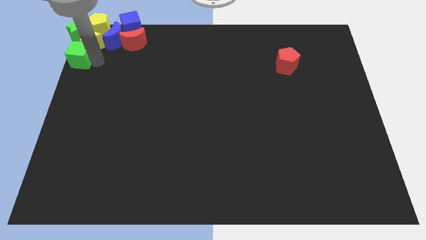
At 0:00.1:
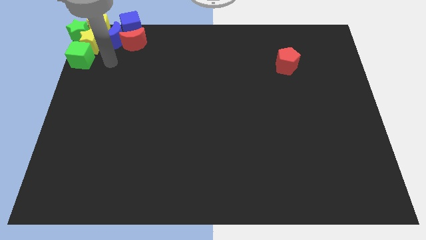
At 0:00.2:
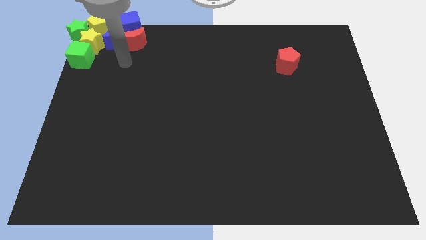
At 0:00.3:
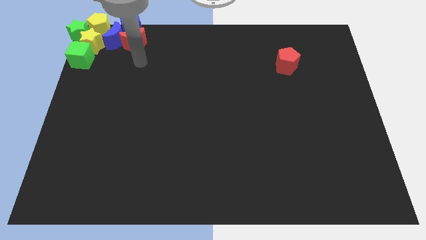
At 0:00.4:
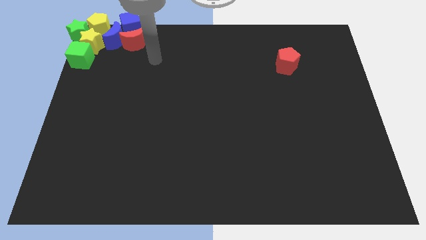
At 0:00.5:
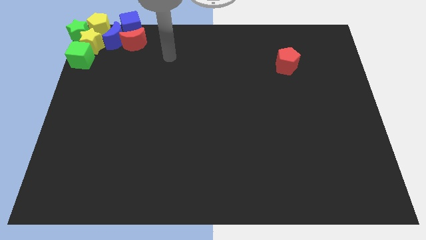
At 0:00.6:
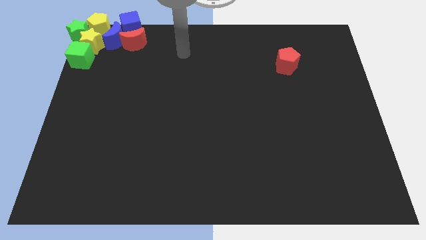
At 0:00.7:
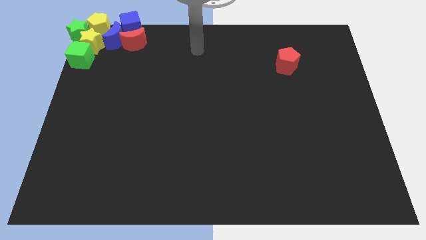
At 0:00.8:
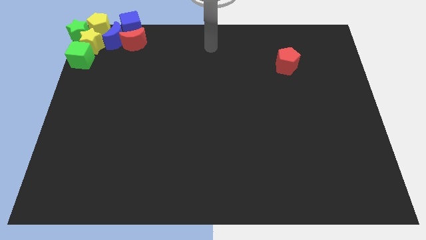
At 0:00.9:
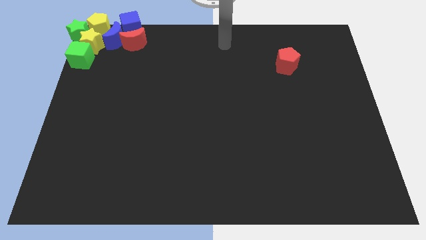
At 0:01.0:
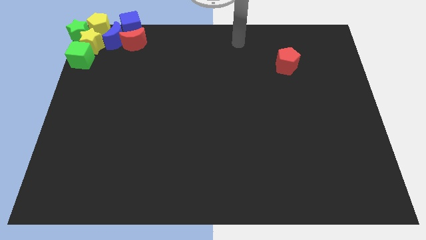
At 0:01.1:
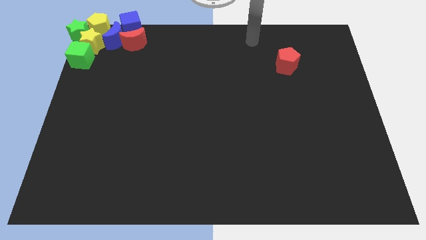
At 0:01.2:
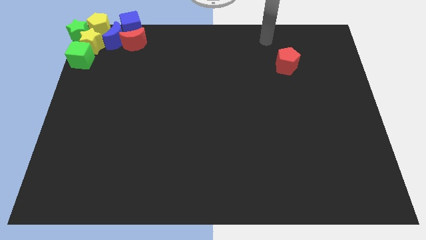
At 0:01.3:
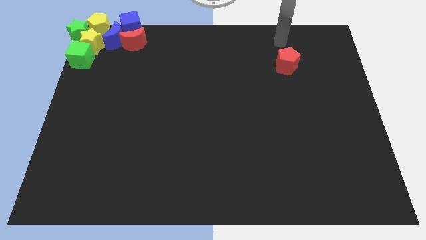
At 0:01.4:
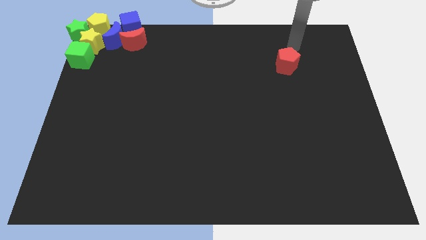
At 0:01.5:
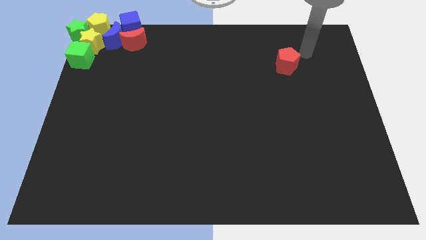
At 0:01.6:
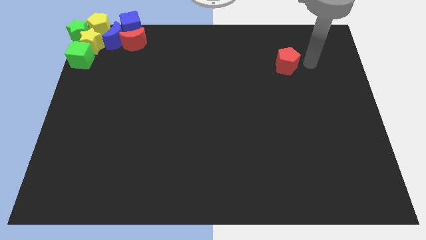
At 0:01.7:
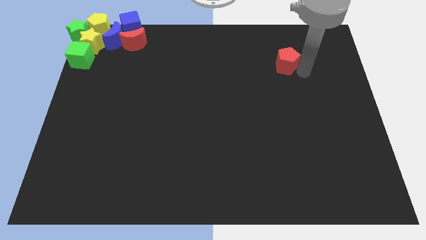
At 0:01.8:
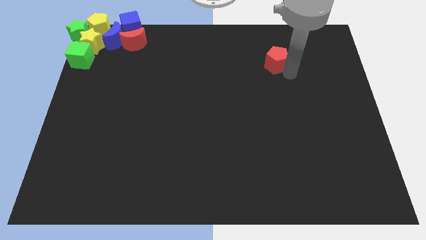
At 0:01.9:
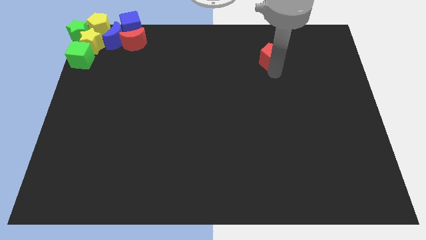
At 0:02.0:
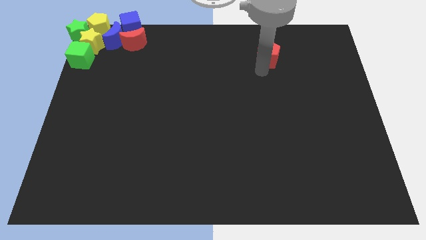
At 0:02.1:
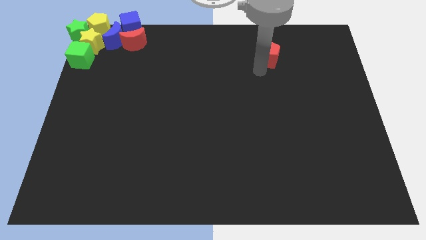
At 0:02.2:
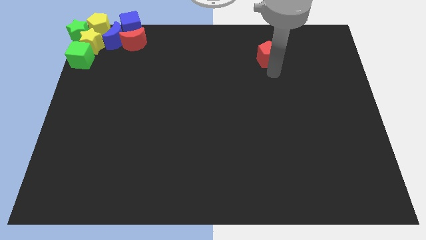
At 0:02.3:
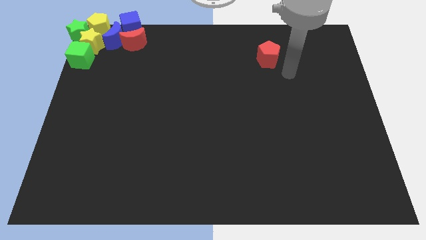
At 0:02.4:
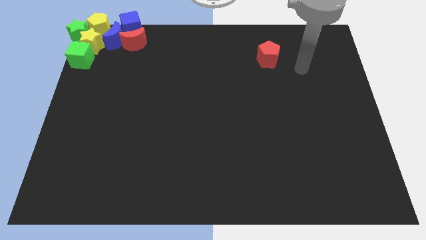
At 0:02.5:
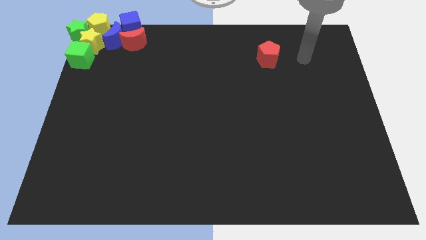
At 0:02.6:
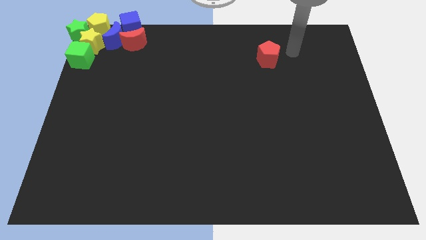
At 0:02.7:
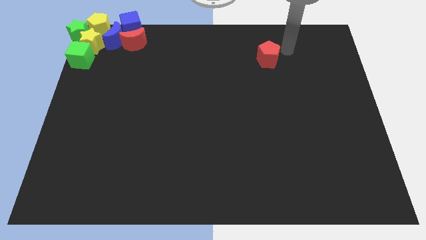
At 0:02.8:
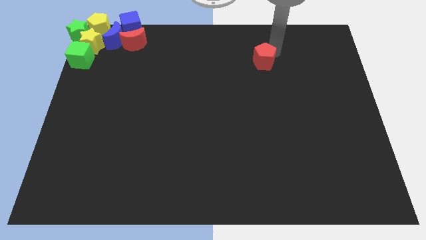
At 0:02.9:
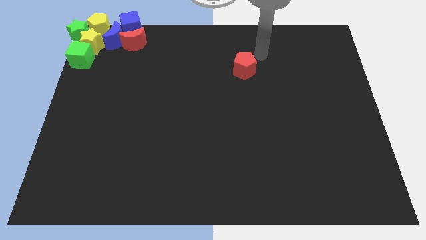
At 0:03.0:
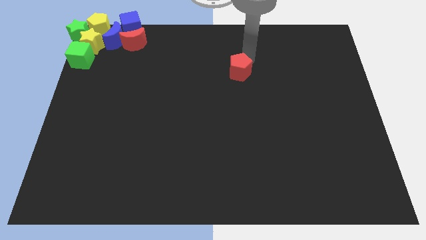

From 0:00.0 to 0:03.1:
push the red pentagon slightly bottom left to the board

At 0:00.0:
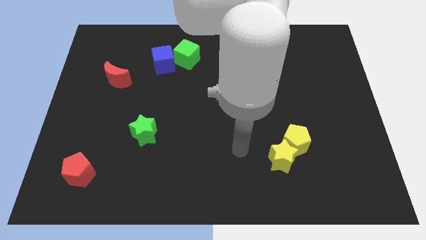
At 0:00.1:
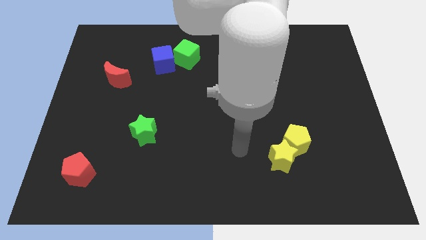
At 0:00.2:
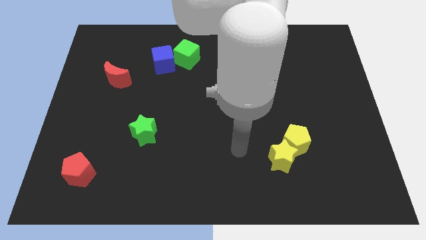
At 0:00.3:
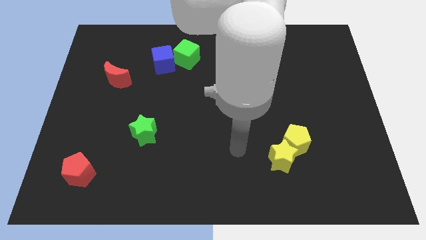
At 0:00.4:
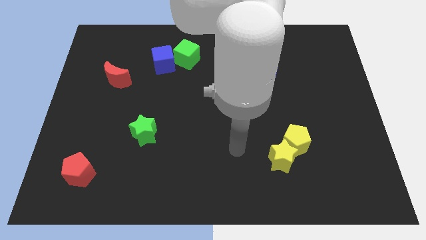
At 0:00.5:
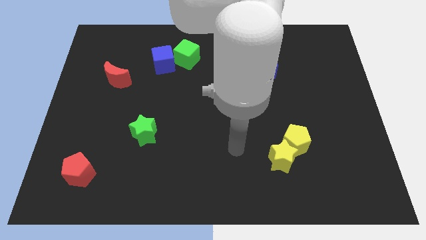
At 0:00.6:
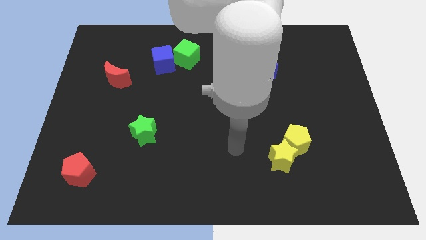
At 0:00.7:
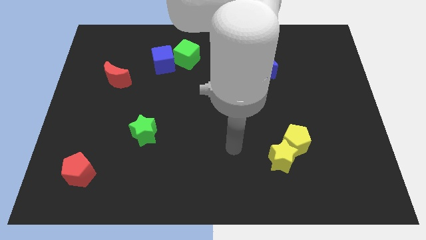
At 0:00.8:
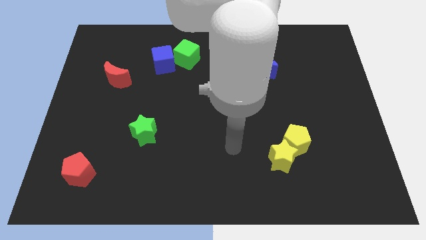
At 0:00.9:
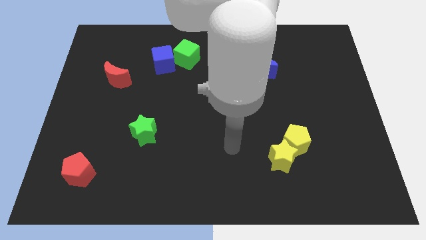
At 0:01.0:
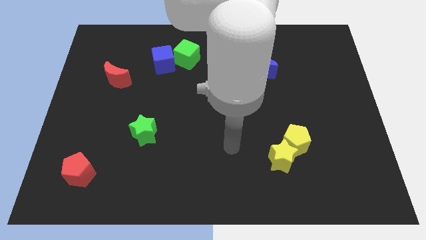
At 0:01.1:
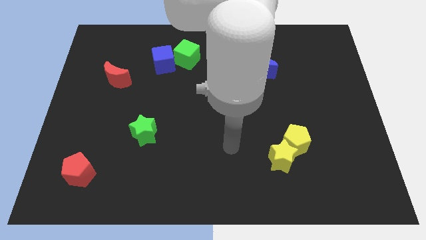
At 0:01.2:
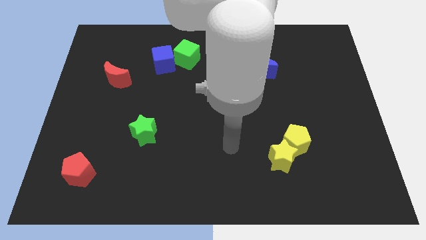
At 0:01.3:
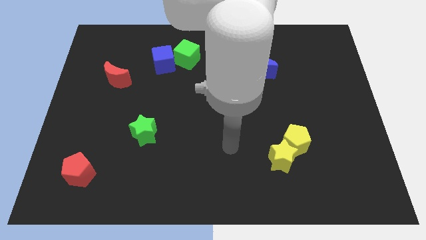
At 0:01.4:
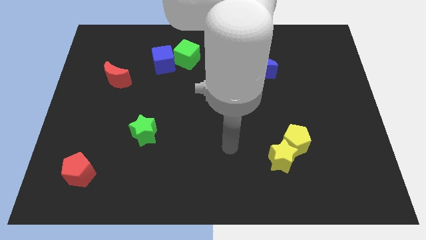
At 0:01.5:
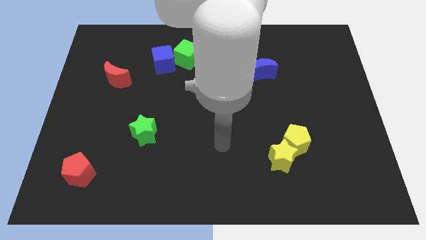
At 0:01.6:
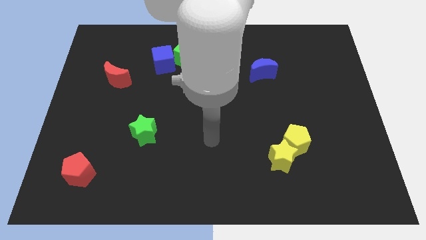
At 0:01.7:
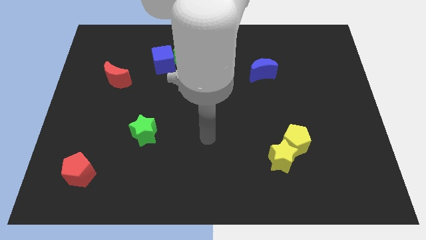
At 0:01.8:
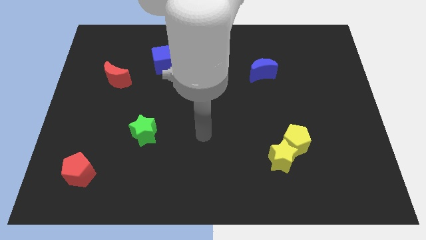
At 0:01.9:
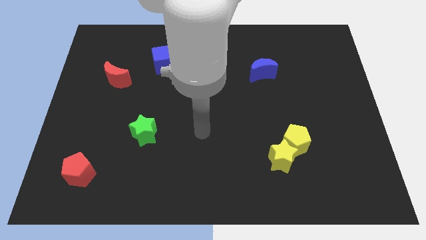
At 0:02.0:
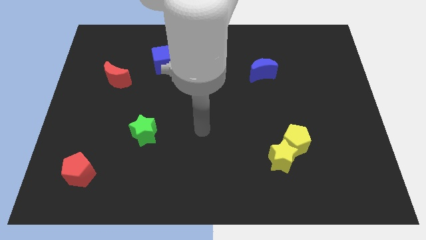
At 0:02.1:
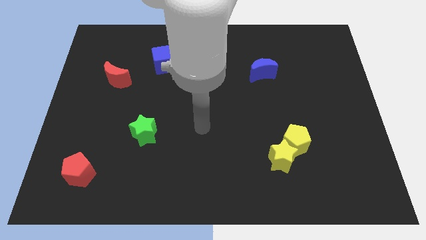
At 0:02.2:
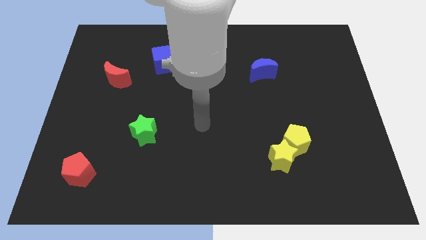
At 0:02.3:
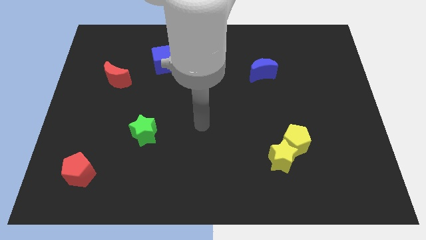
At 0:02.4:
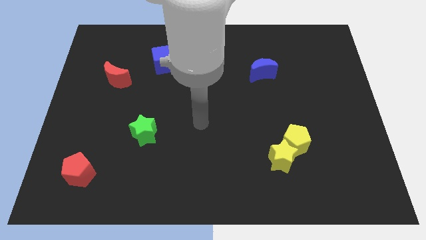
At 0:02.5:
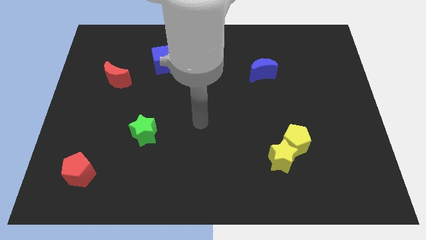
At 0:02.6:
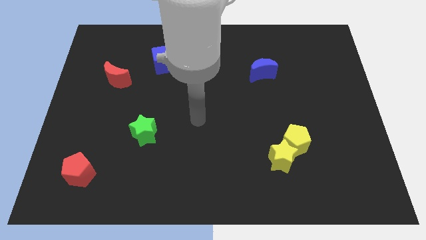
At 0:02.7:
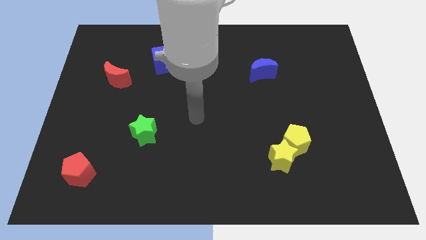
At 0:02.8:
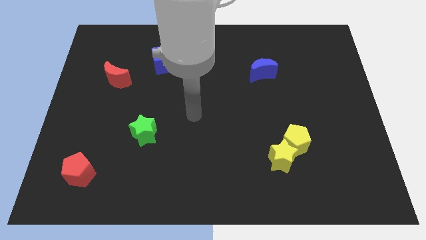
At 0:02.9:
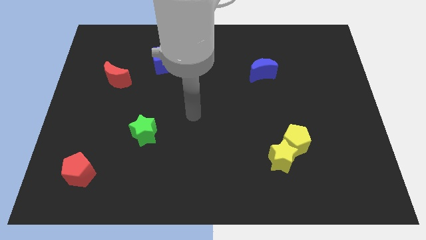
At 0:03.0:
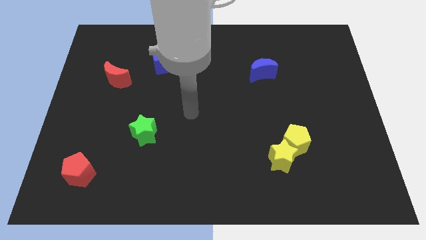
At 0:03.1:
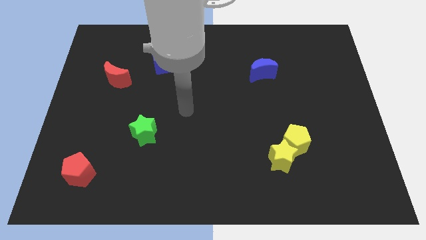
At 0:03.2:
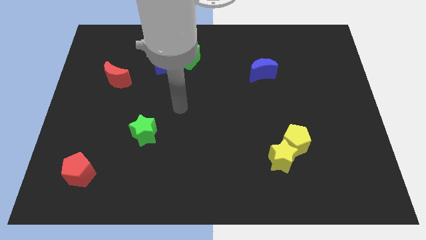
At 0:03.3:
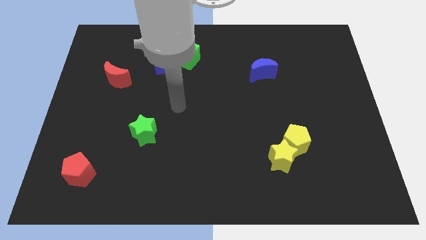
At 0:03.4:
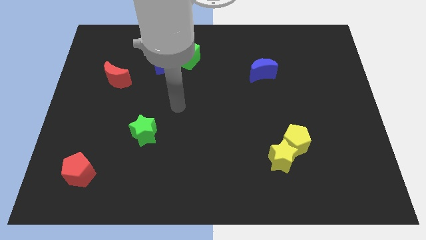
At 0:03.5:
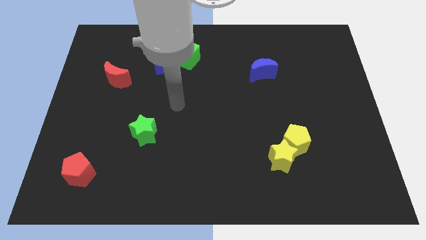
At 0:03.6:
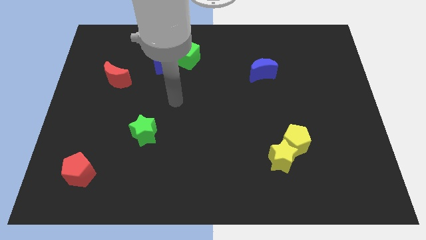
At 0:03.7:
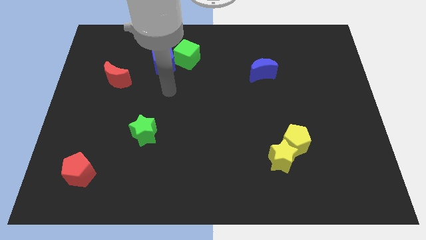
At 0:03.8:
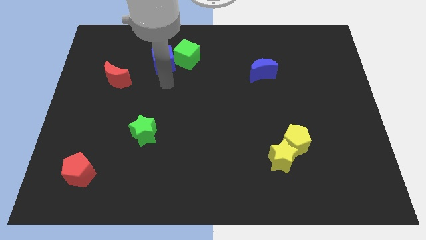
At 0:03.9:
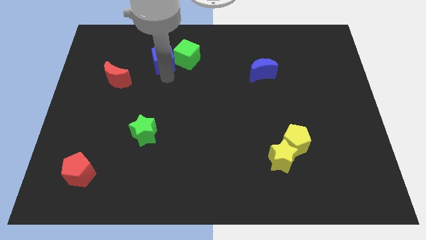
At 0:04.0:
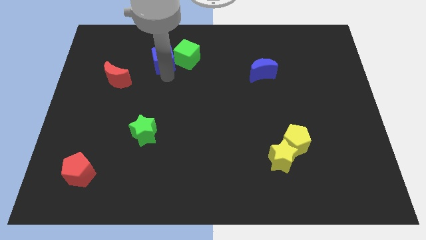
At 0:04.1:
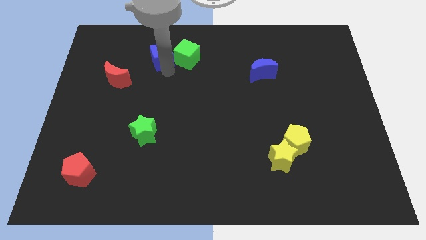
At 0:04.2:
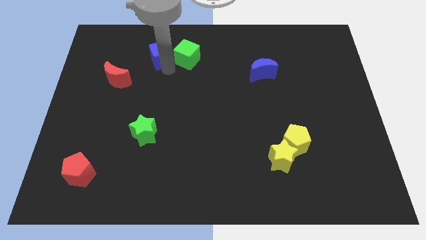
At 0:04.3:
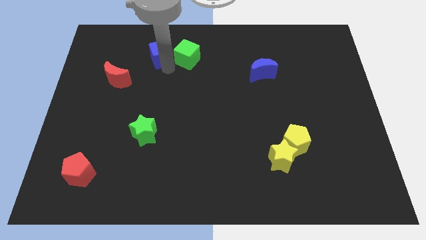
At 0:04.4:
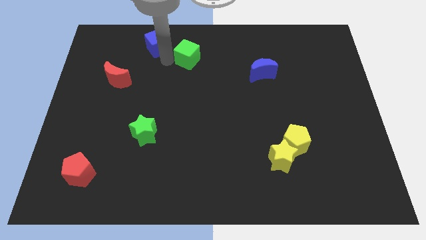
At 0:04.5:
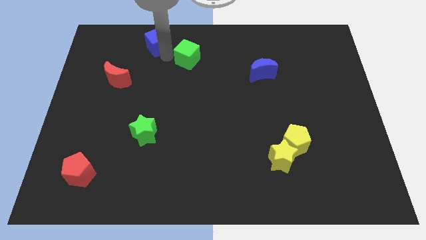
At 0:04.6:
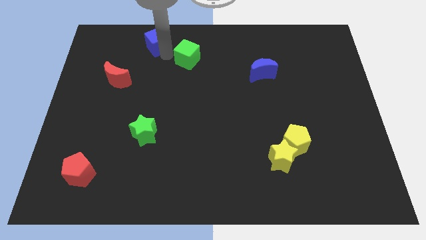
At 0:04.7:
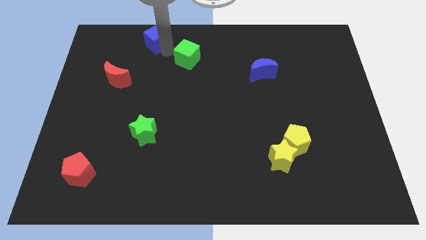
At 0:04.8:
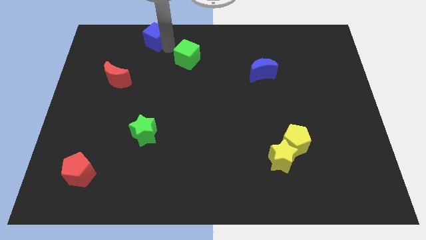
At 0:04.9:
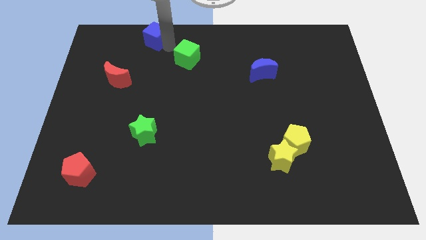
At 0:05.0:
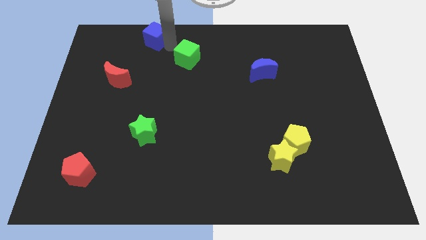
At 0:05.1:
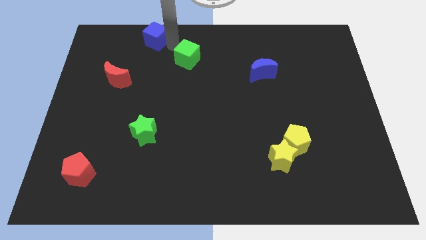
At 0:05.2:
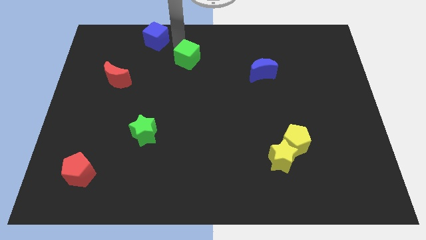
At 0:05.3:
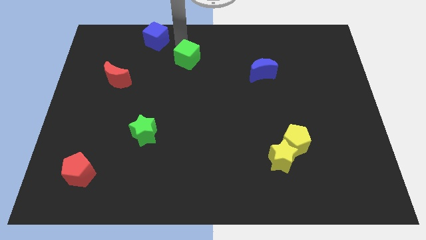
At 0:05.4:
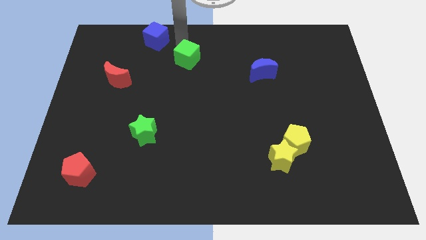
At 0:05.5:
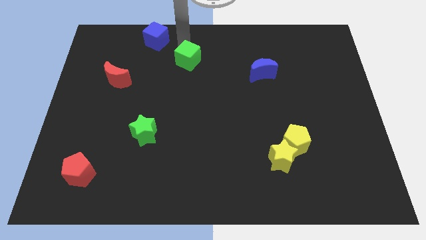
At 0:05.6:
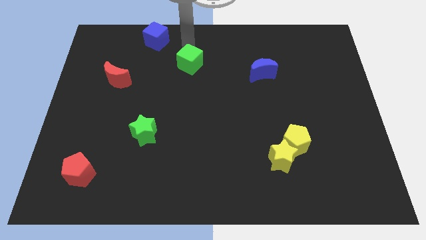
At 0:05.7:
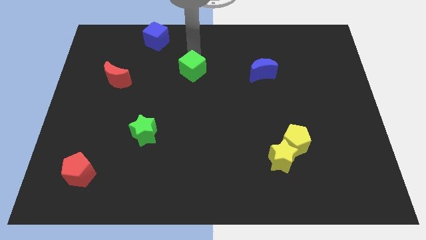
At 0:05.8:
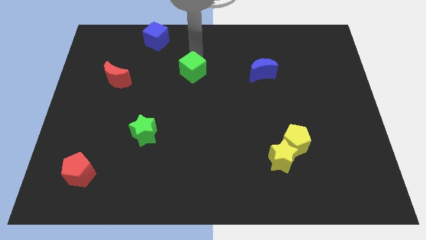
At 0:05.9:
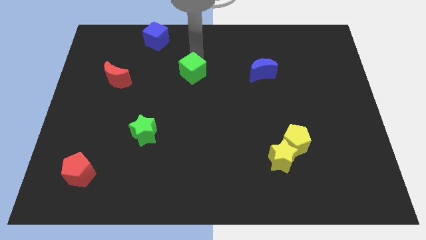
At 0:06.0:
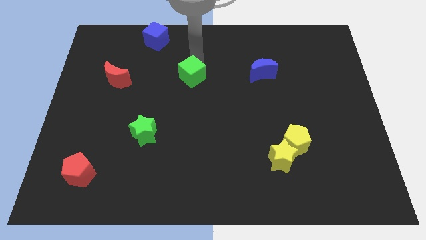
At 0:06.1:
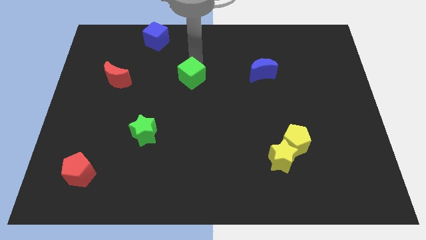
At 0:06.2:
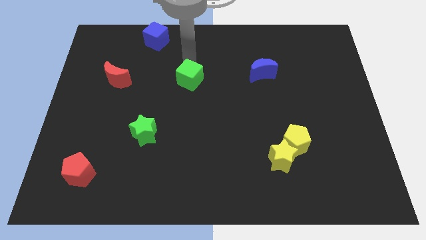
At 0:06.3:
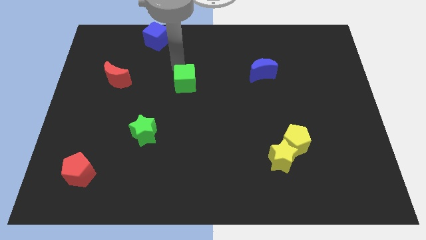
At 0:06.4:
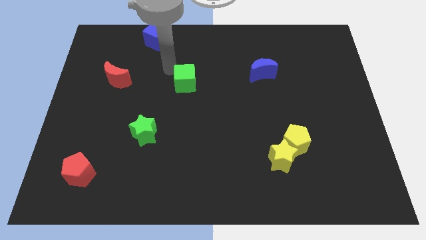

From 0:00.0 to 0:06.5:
separate blue cube from green cube
